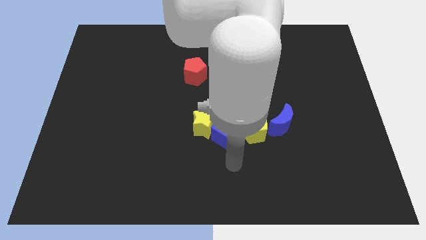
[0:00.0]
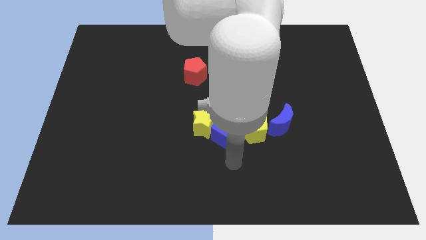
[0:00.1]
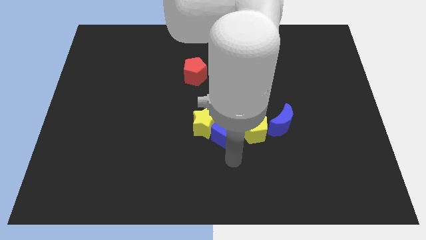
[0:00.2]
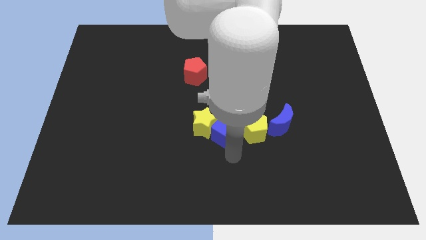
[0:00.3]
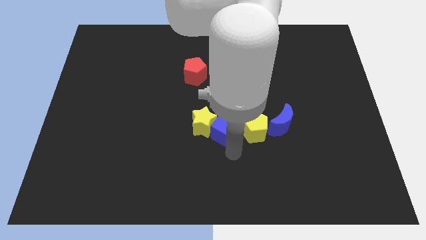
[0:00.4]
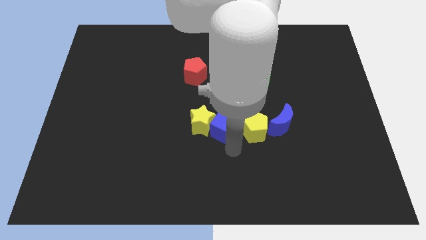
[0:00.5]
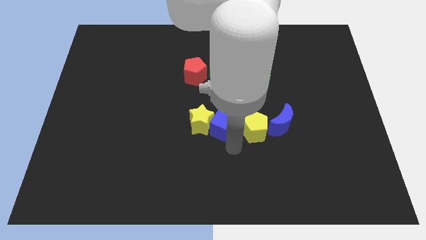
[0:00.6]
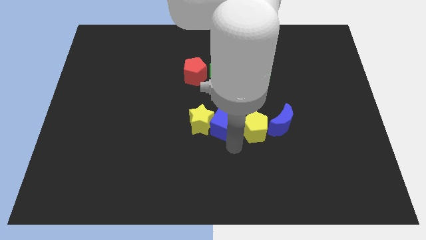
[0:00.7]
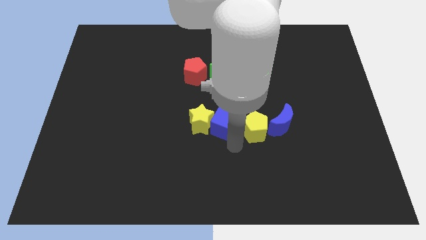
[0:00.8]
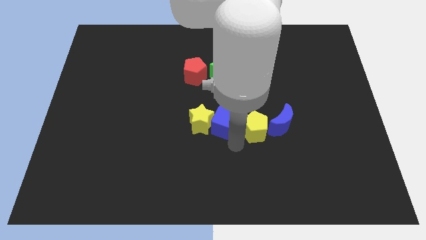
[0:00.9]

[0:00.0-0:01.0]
push the blue cube in between the yellow star and yellow pentagon

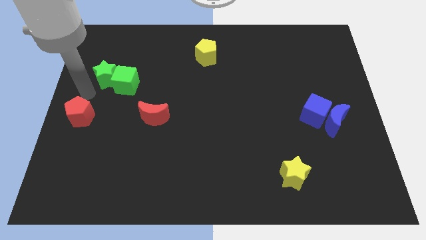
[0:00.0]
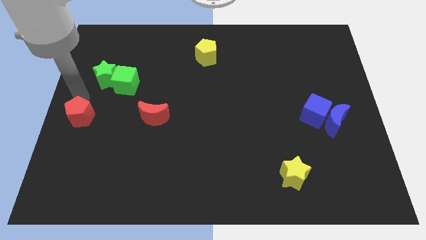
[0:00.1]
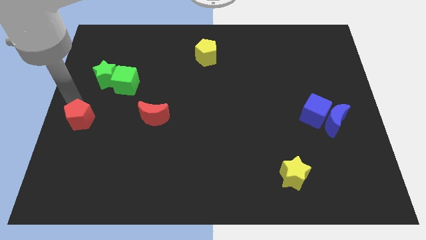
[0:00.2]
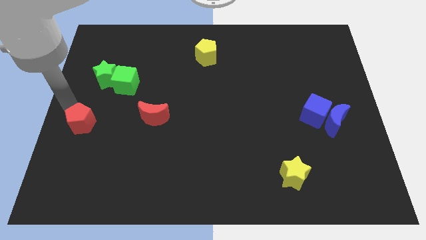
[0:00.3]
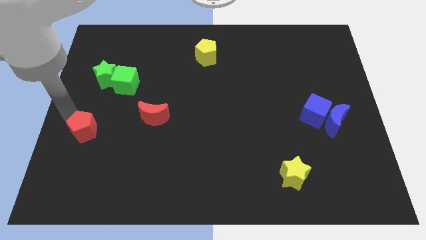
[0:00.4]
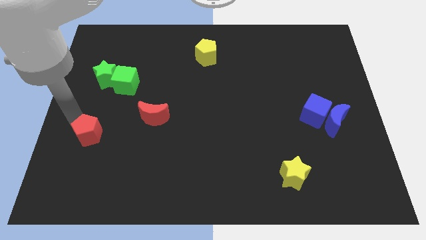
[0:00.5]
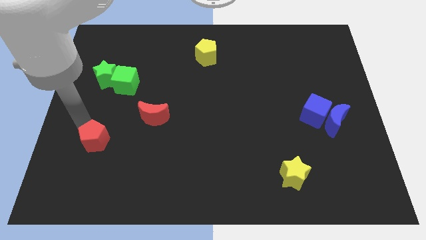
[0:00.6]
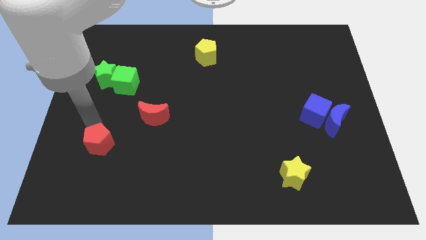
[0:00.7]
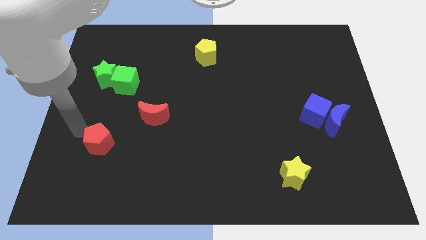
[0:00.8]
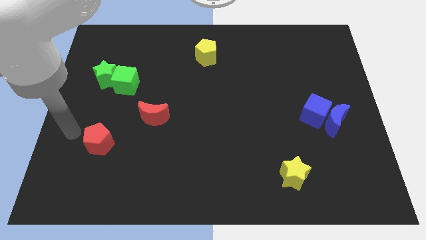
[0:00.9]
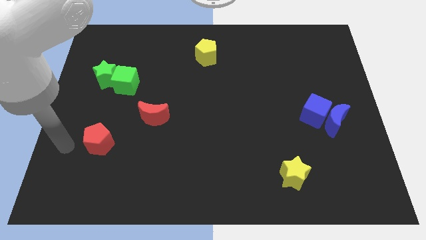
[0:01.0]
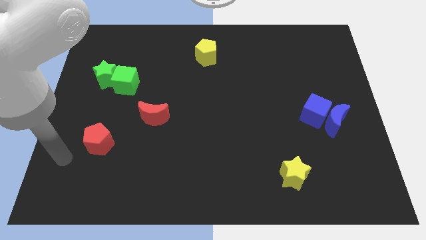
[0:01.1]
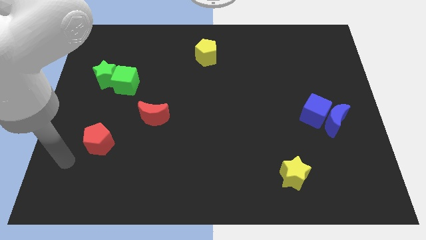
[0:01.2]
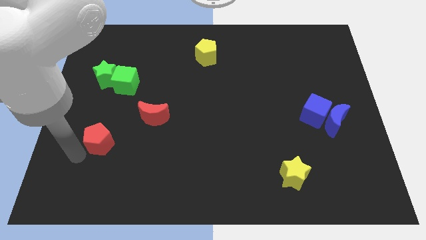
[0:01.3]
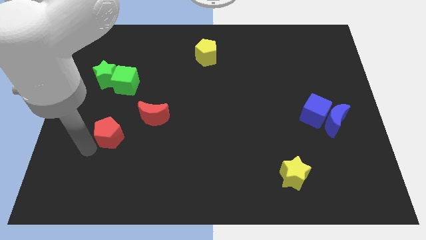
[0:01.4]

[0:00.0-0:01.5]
place the red pentagon to the bottom of the green cube

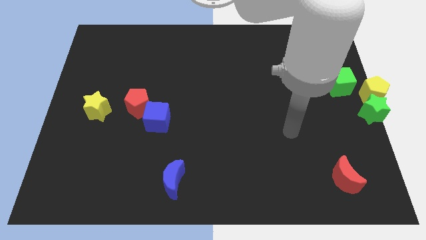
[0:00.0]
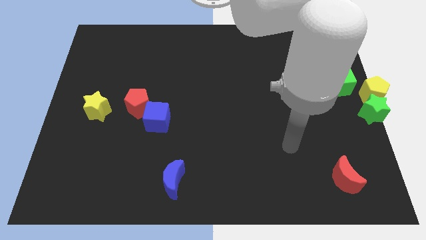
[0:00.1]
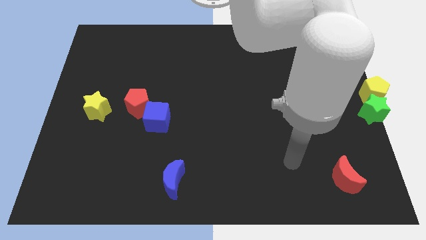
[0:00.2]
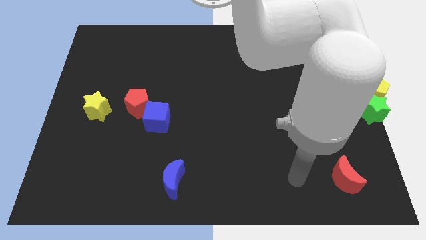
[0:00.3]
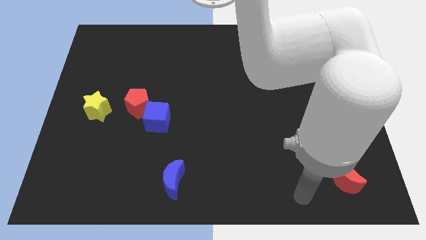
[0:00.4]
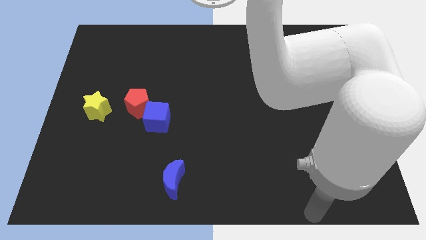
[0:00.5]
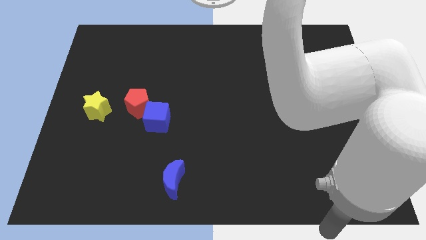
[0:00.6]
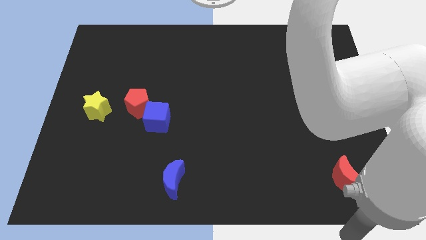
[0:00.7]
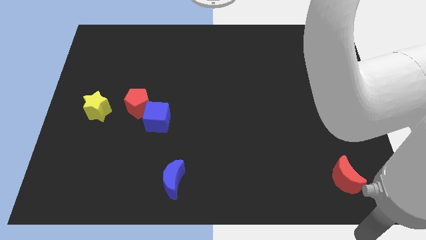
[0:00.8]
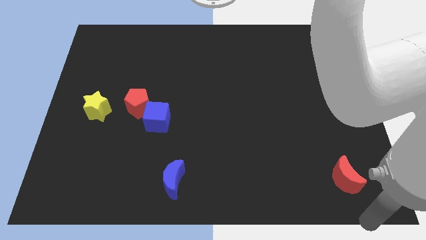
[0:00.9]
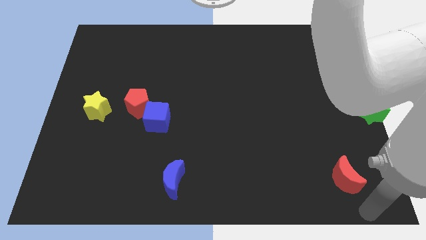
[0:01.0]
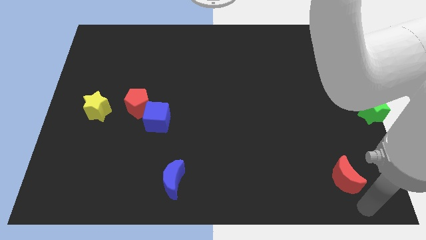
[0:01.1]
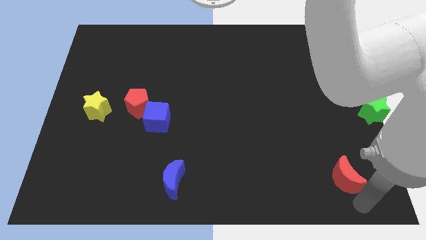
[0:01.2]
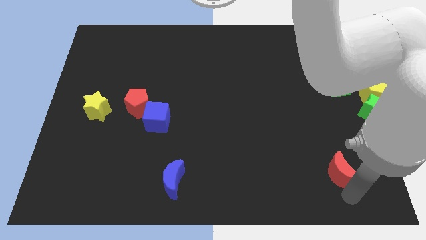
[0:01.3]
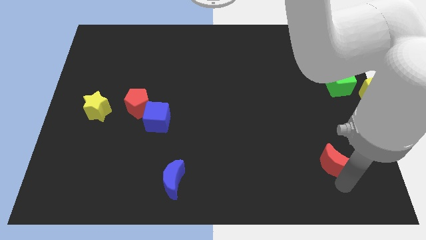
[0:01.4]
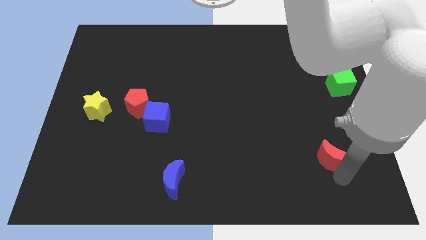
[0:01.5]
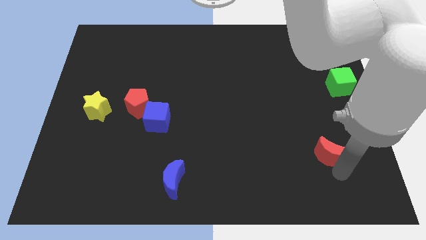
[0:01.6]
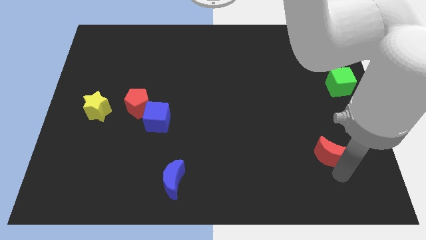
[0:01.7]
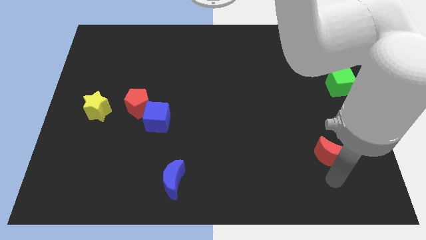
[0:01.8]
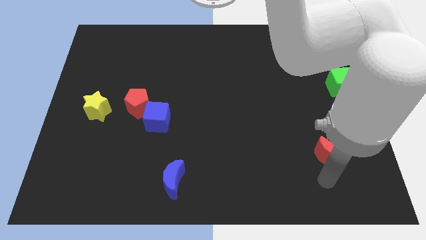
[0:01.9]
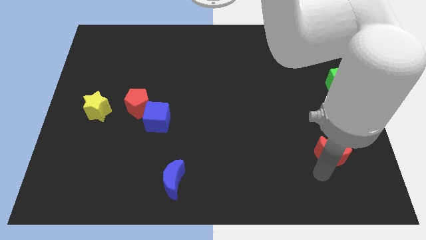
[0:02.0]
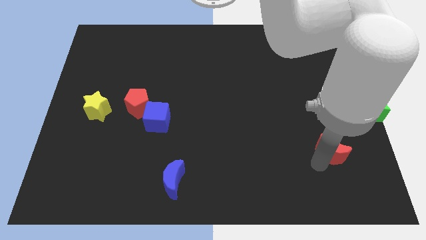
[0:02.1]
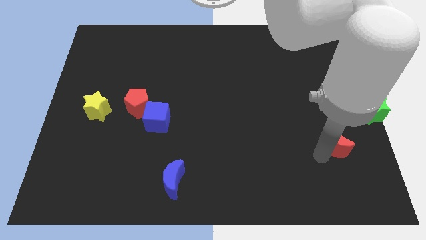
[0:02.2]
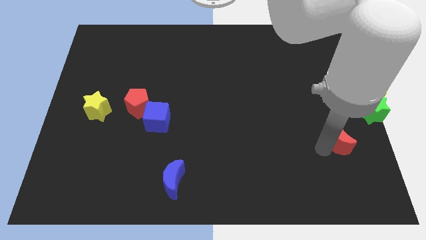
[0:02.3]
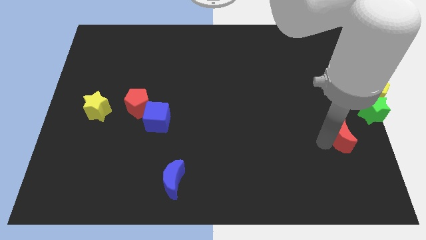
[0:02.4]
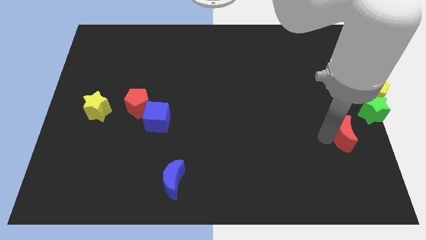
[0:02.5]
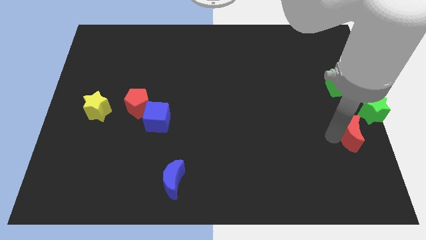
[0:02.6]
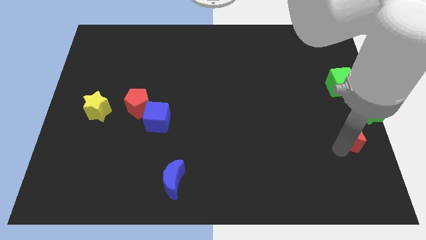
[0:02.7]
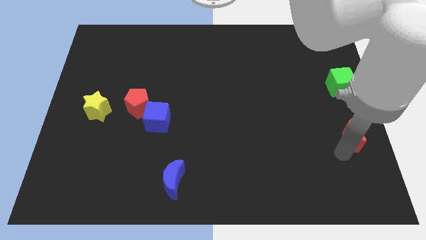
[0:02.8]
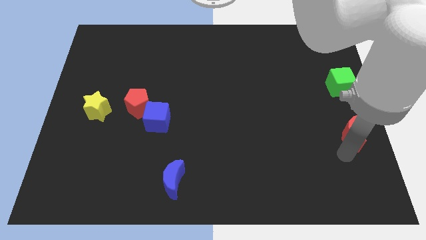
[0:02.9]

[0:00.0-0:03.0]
place the red moon vertically below the green cube

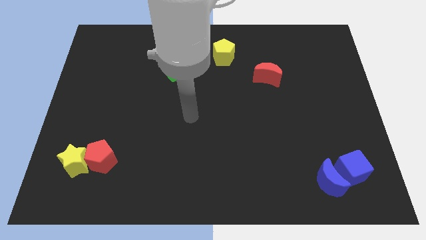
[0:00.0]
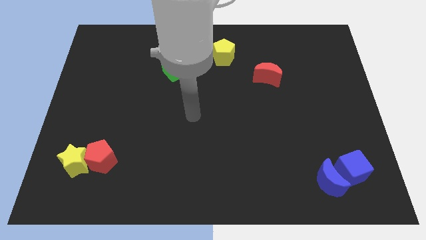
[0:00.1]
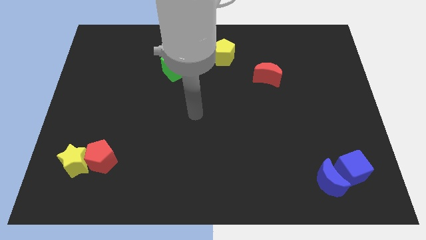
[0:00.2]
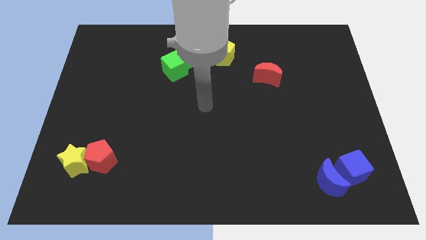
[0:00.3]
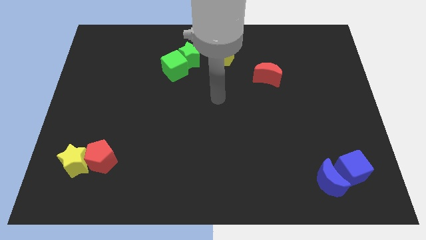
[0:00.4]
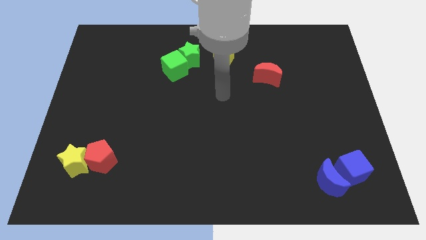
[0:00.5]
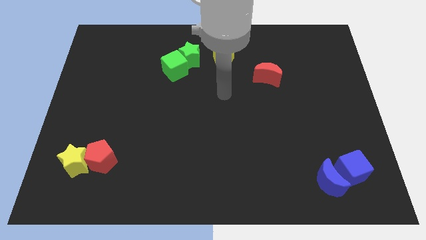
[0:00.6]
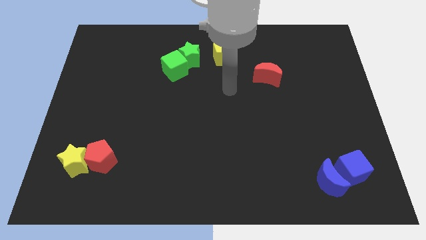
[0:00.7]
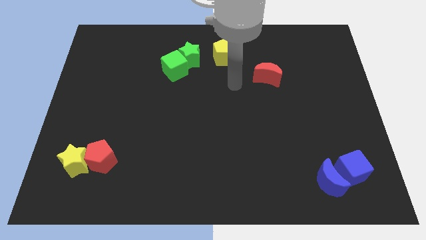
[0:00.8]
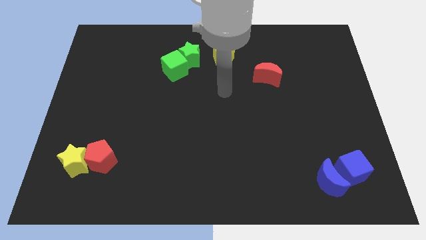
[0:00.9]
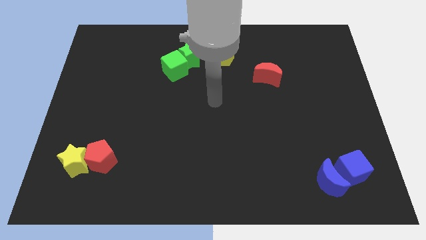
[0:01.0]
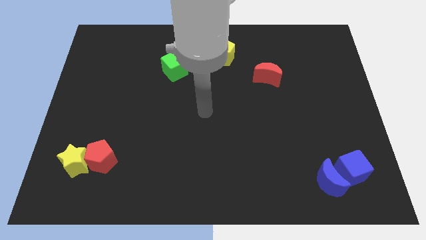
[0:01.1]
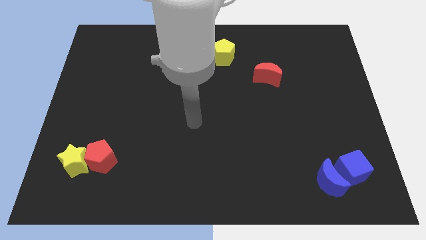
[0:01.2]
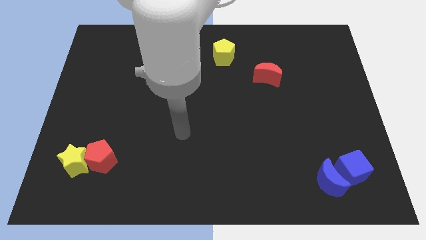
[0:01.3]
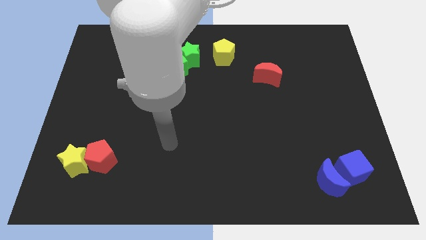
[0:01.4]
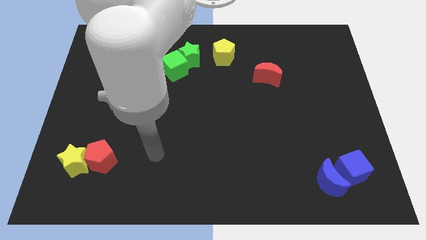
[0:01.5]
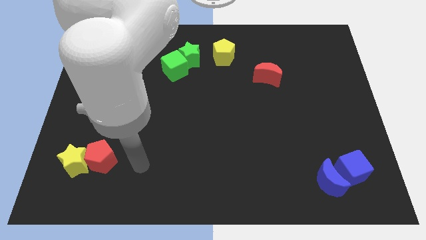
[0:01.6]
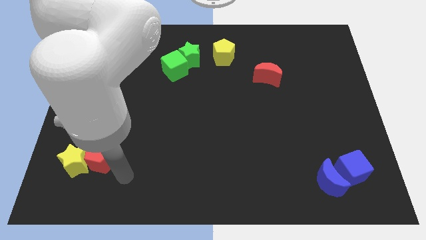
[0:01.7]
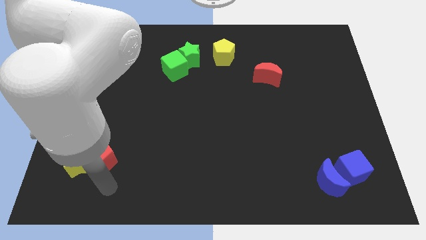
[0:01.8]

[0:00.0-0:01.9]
point your arm below red pentagon

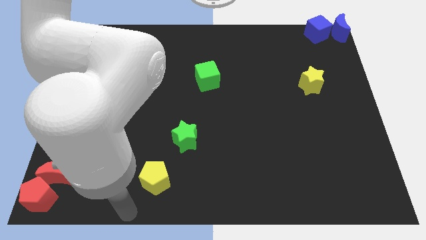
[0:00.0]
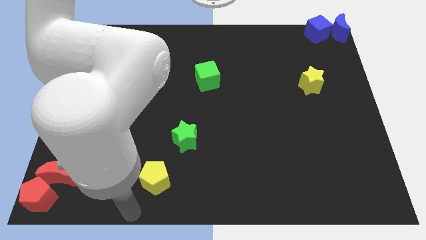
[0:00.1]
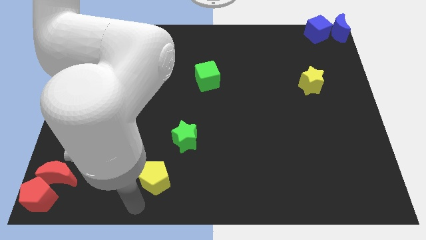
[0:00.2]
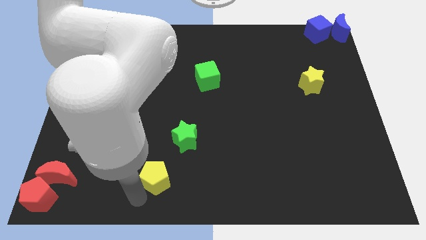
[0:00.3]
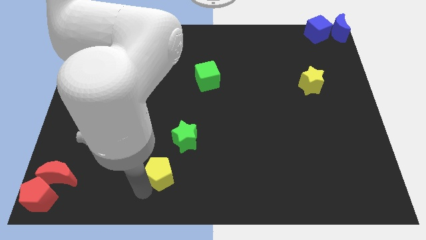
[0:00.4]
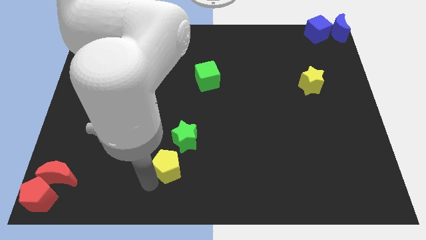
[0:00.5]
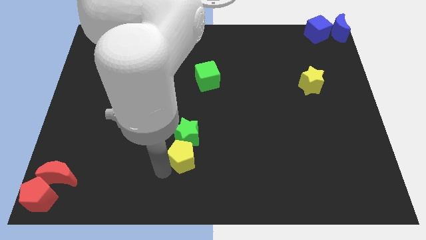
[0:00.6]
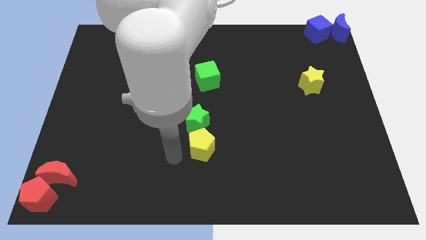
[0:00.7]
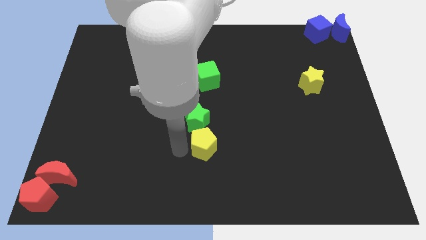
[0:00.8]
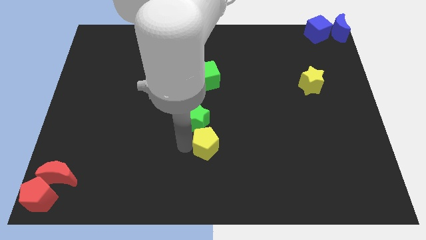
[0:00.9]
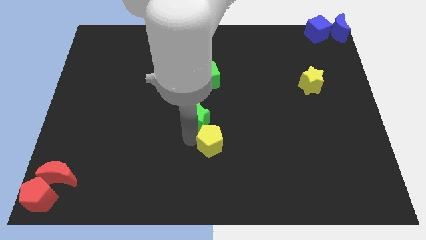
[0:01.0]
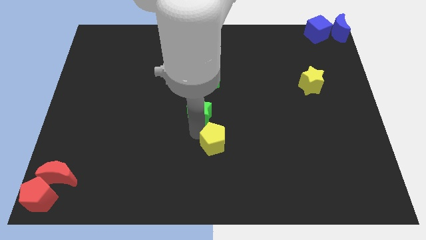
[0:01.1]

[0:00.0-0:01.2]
push the green star and yellow pentagon towards the center
